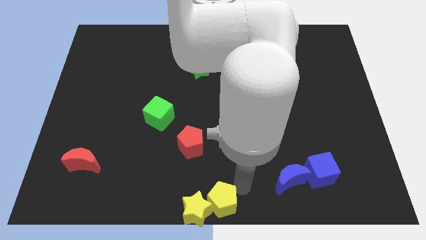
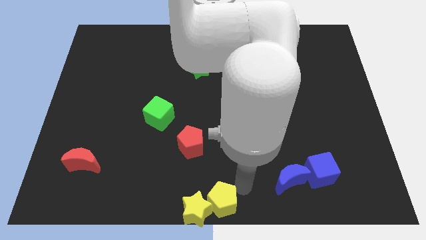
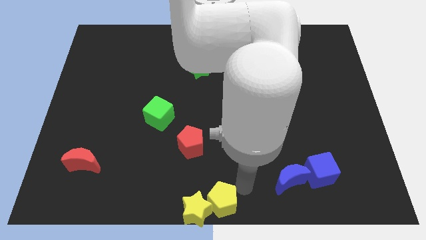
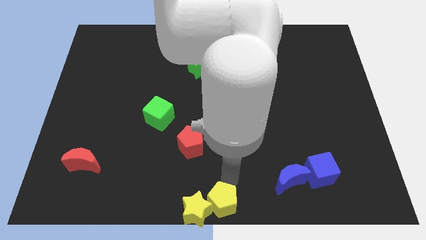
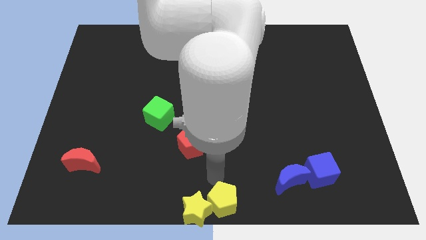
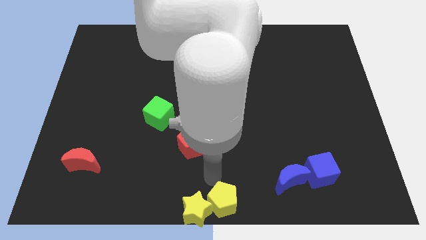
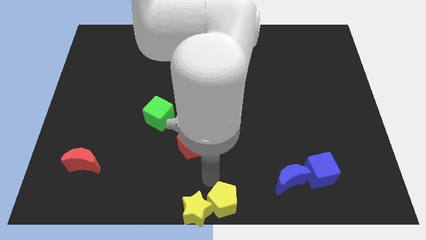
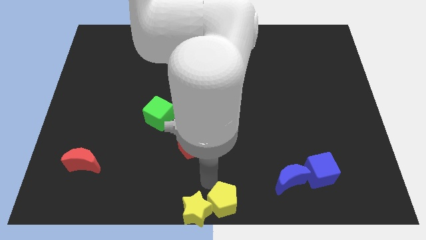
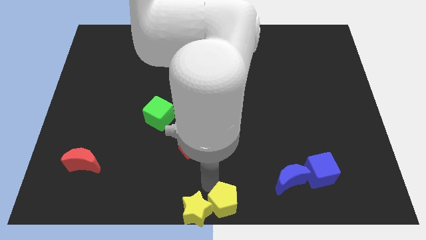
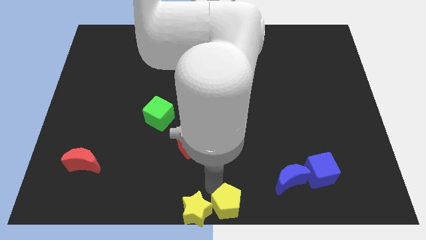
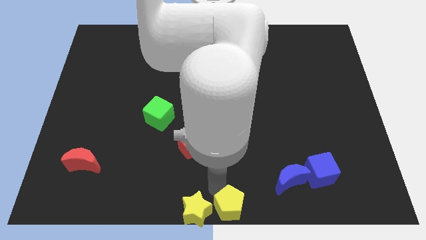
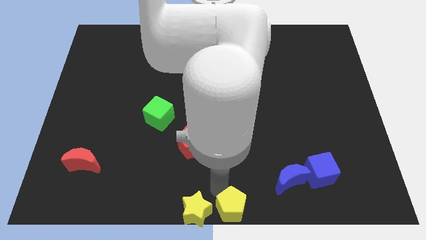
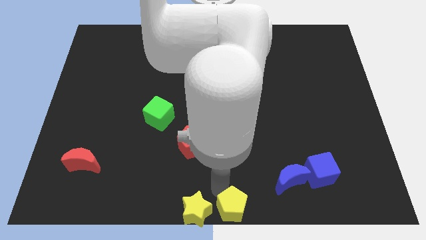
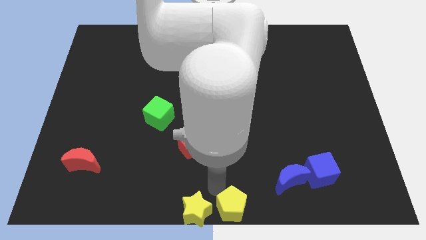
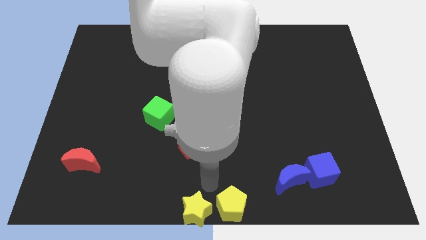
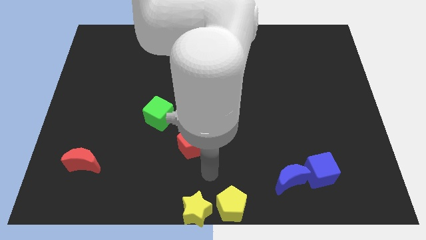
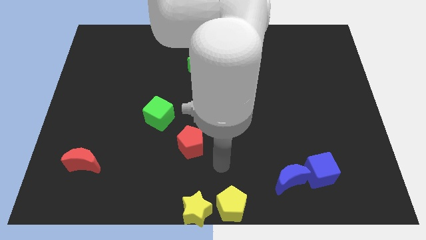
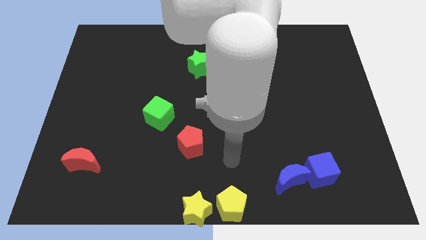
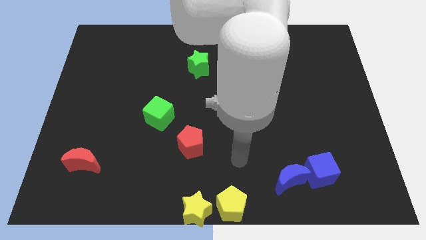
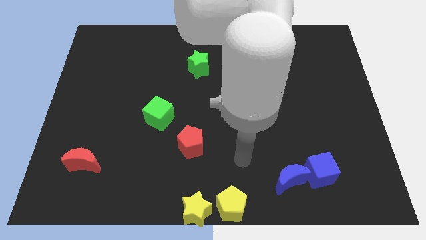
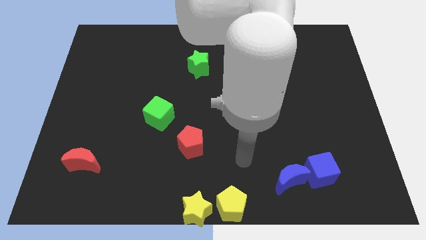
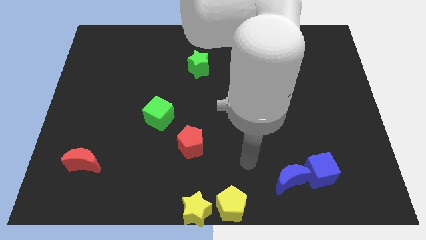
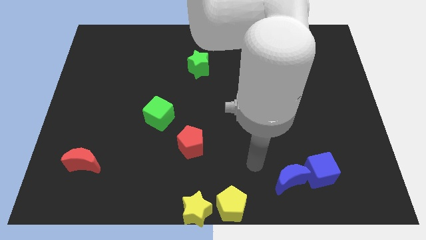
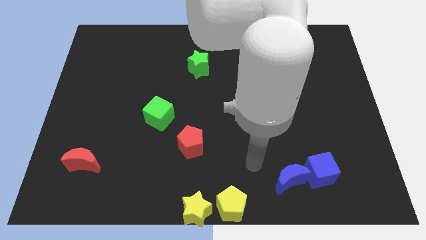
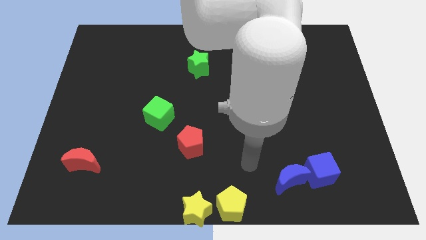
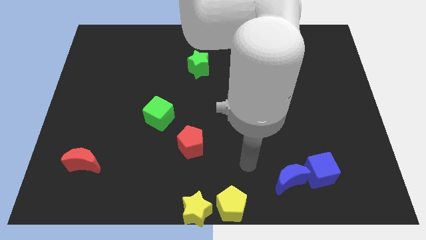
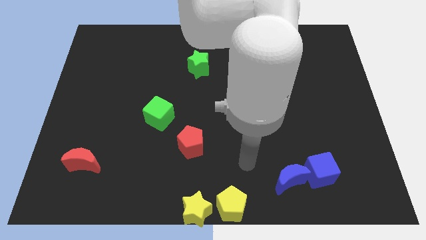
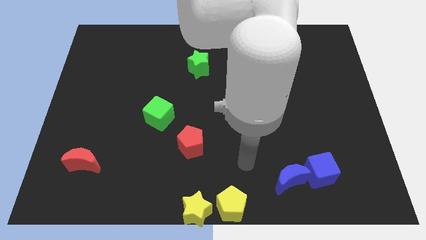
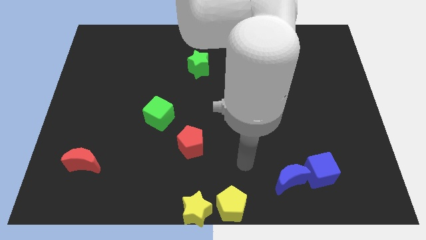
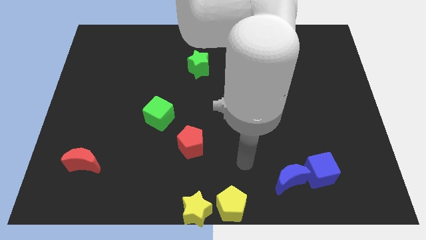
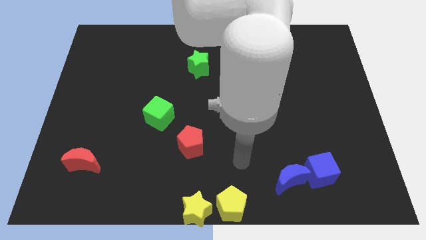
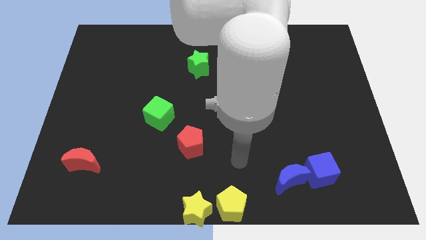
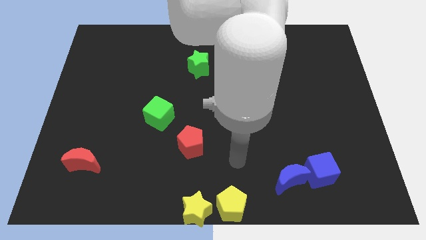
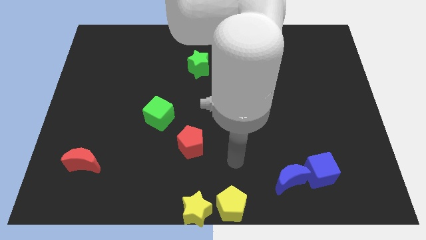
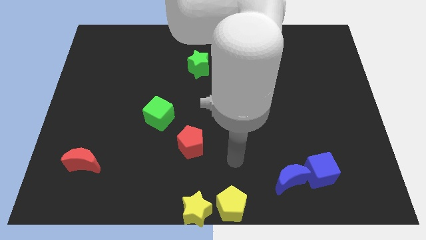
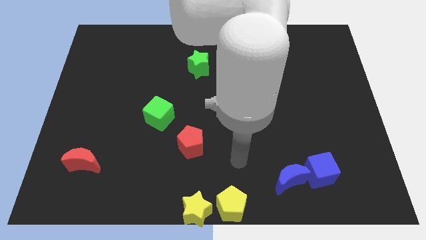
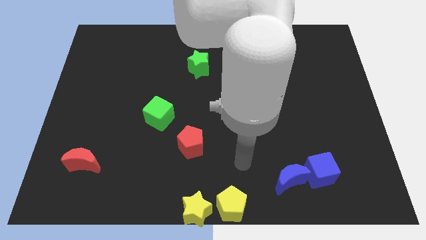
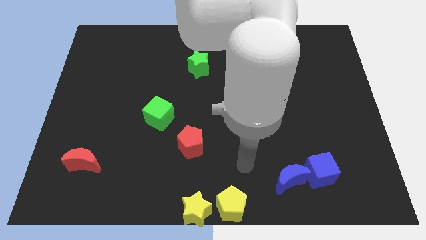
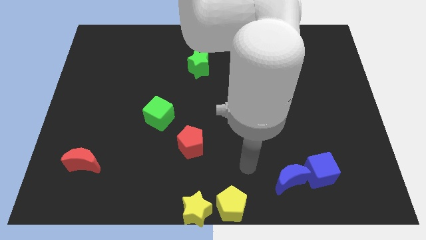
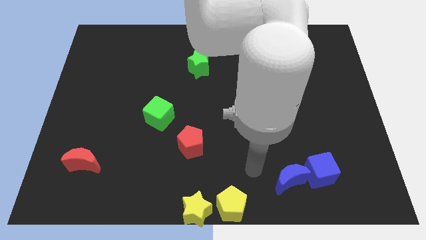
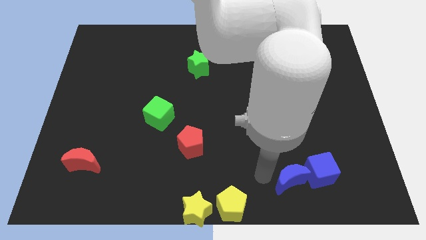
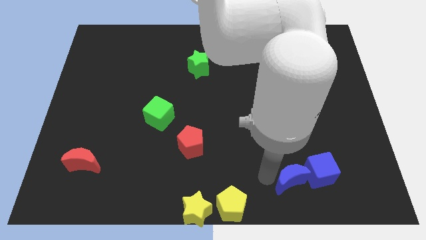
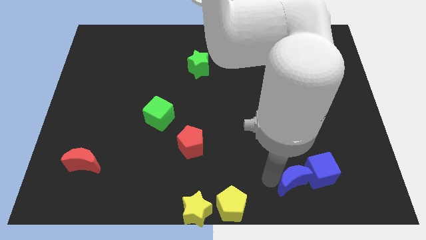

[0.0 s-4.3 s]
move yellow pentagon right beside the yellow star

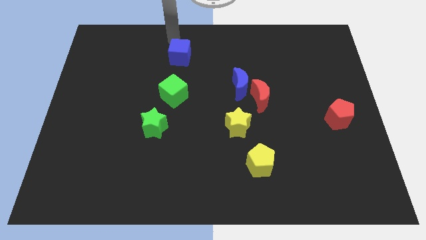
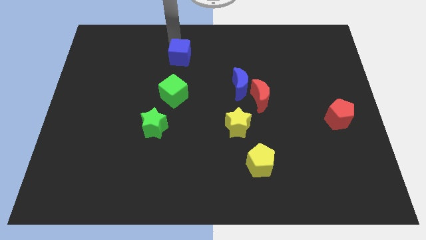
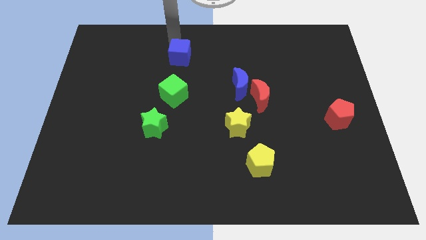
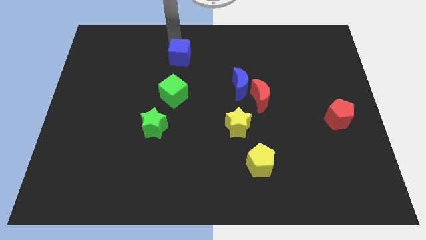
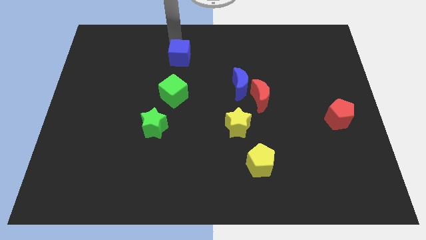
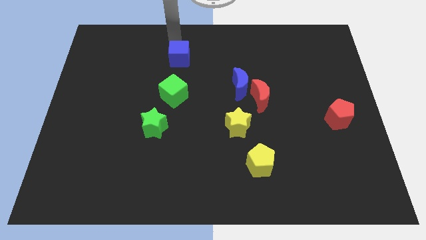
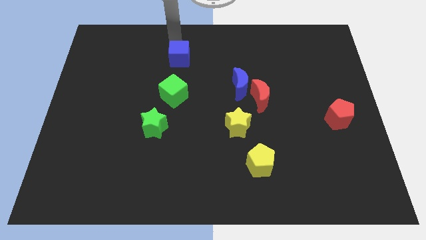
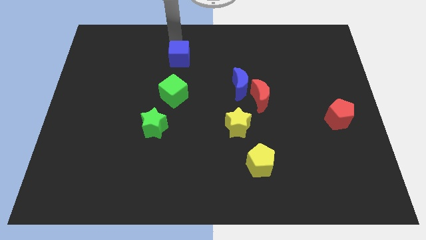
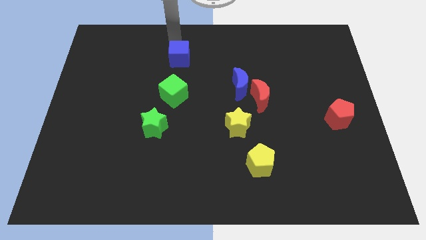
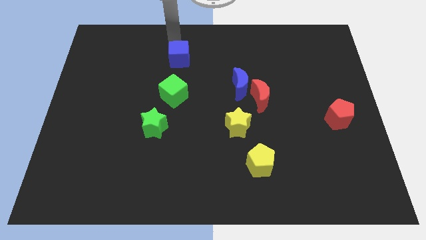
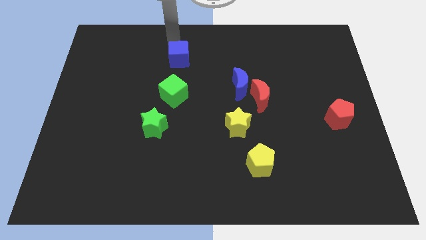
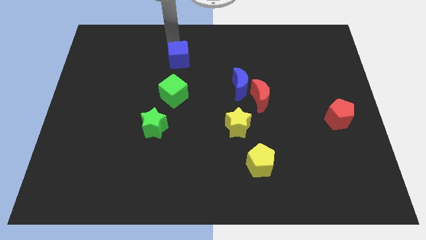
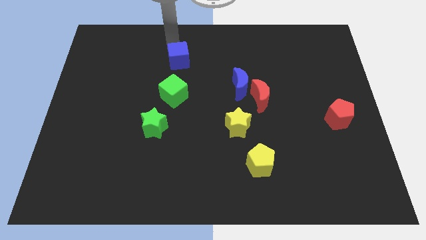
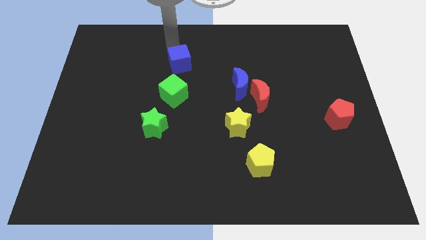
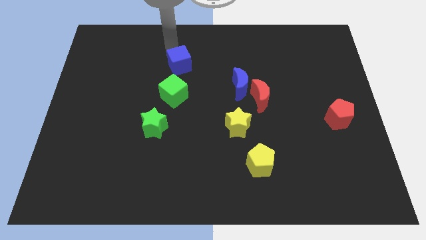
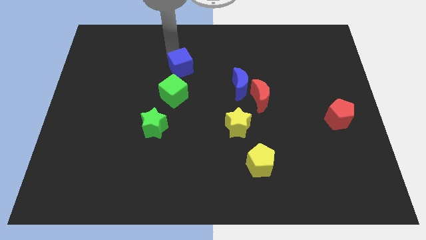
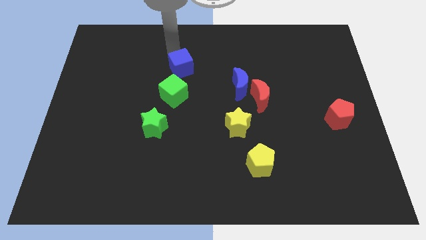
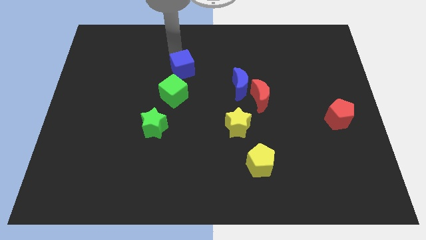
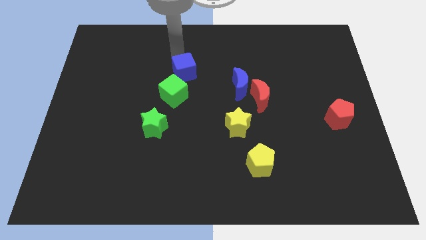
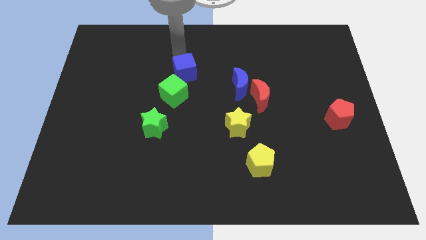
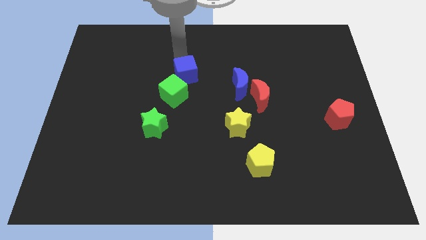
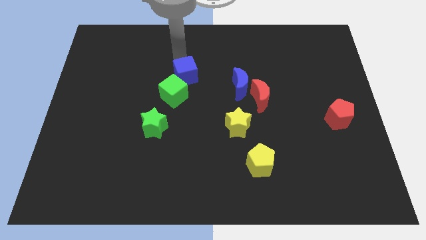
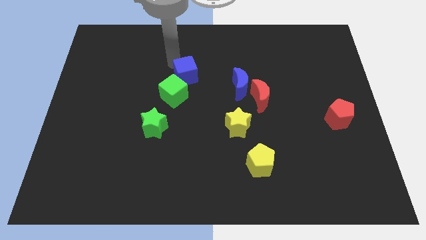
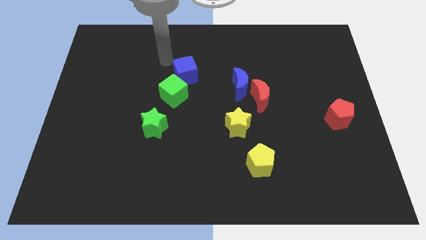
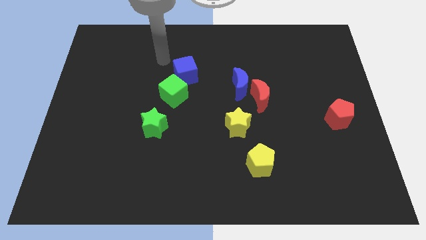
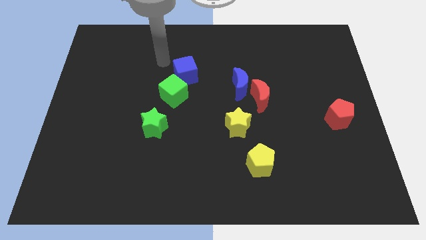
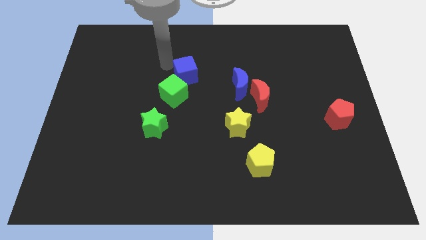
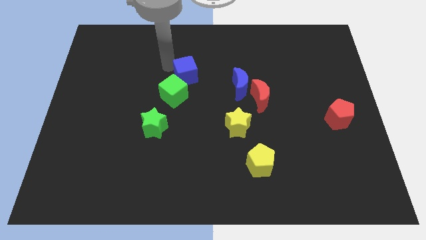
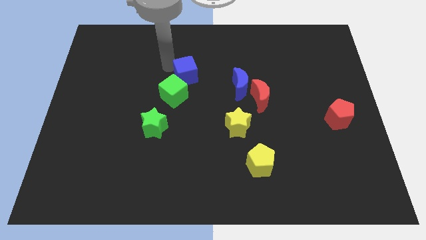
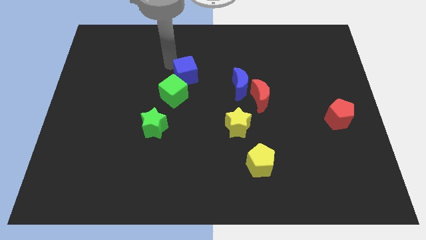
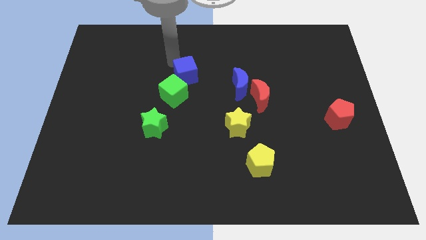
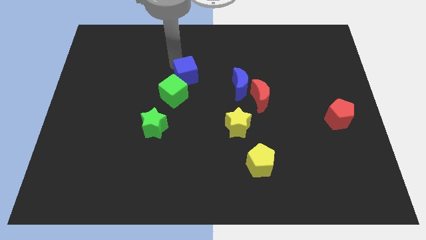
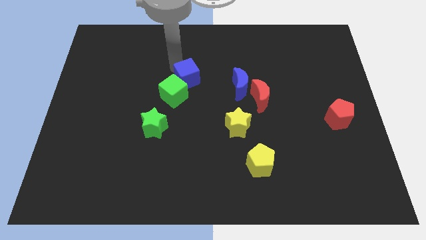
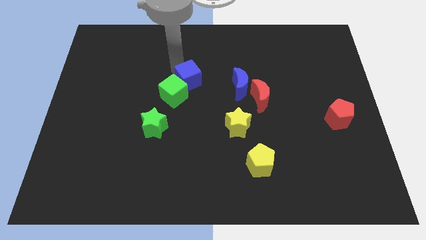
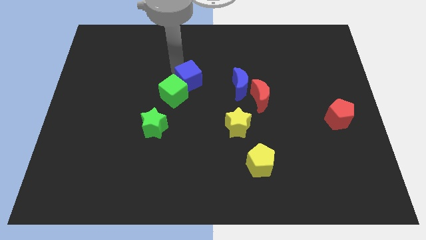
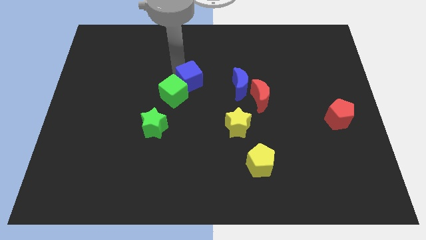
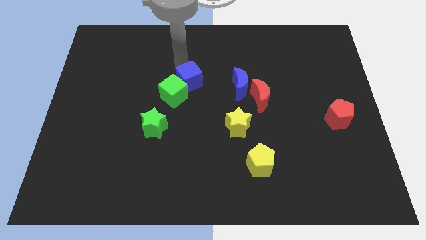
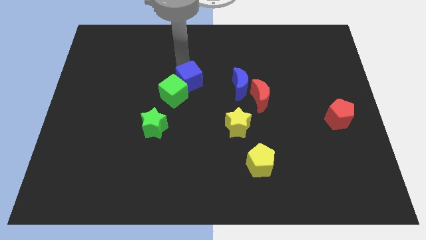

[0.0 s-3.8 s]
place blue blue cube near green cube

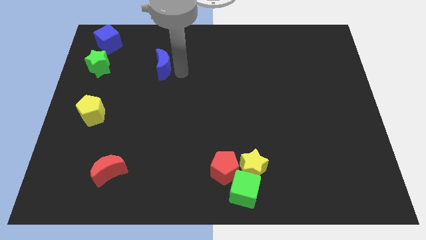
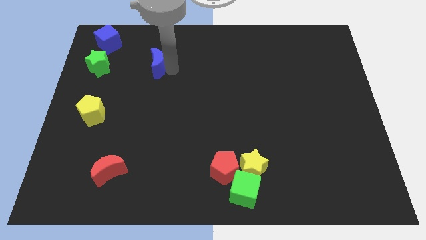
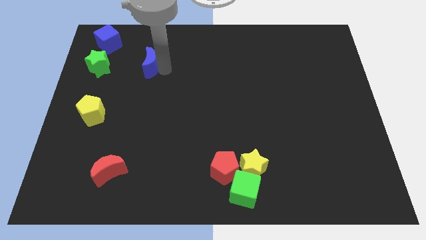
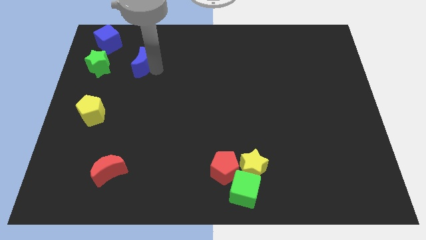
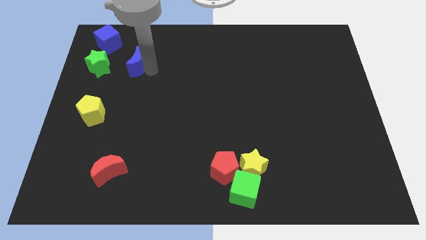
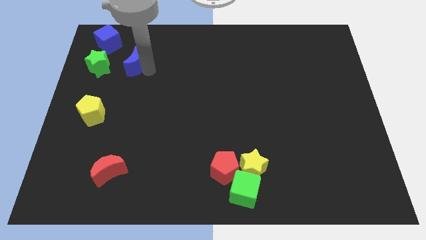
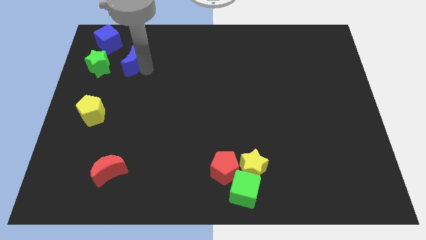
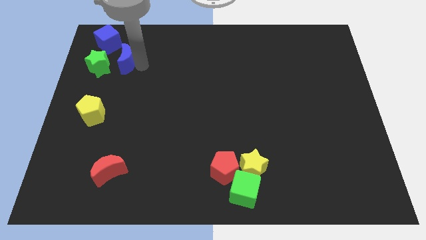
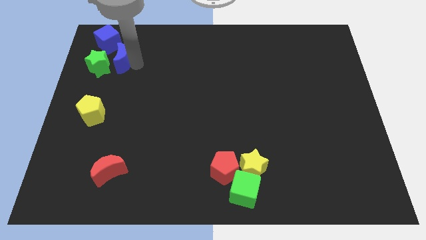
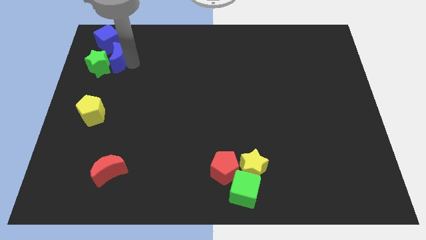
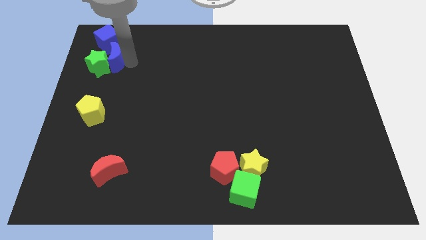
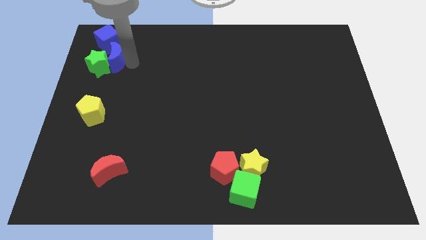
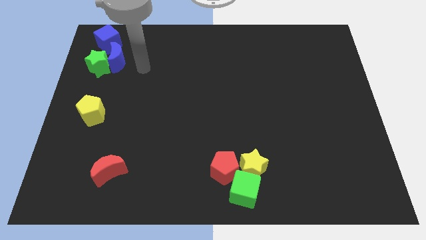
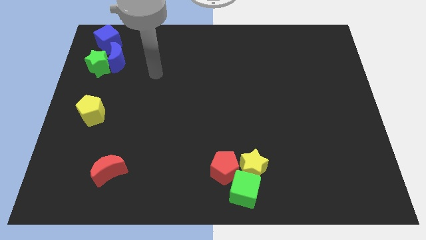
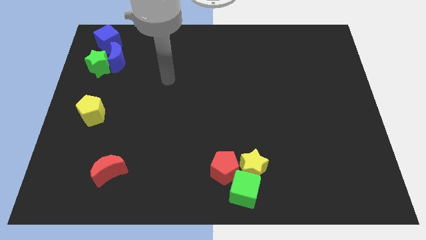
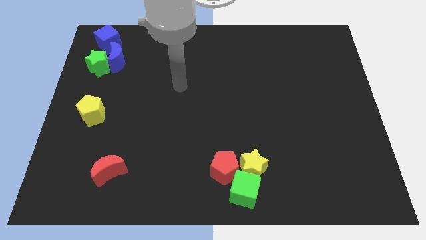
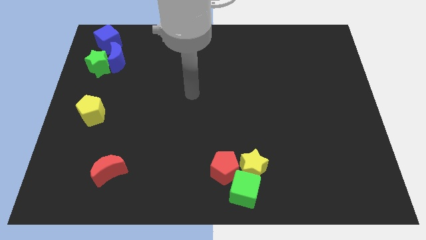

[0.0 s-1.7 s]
push the blue crescent into the green star and the blue square
